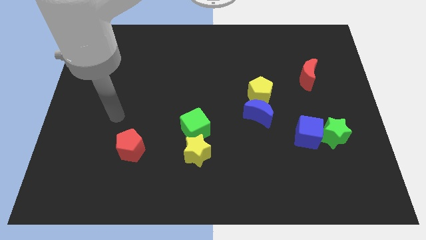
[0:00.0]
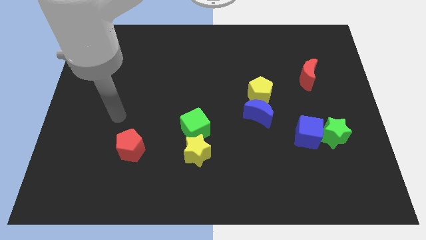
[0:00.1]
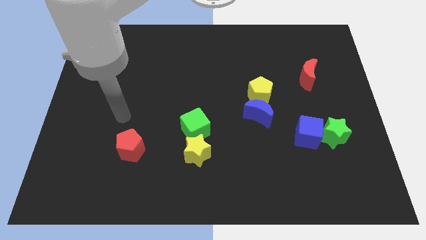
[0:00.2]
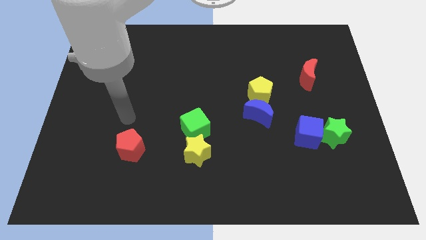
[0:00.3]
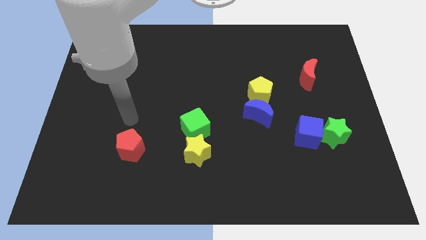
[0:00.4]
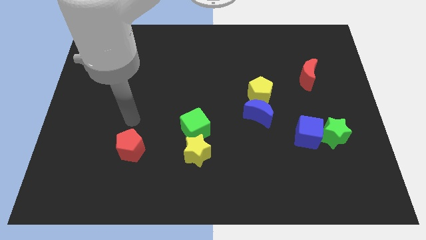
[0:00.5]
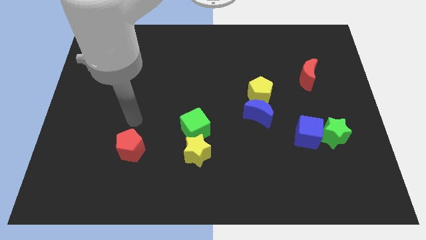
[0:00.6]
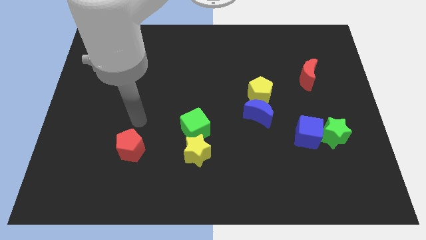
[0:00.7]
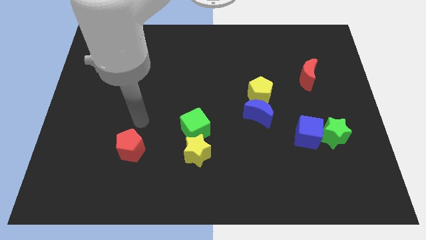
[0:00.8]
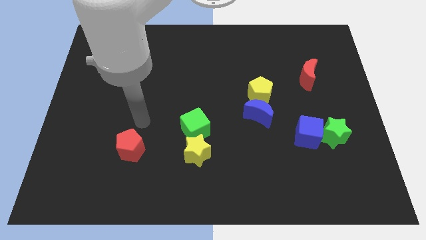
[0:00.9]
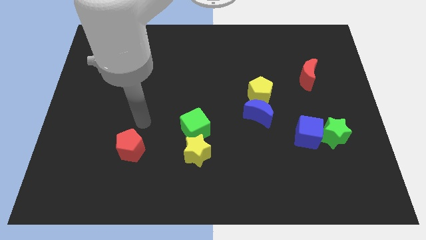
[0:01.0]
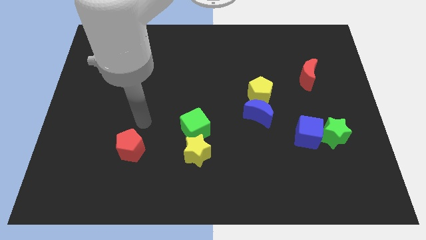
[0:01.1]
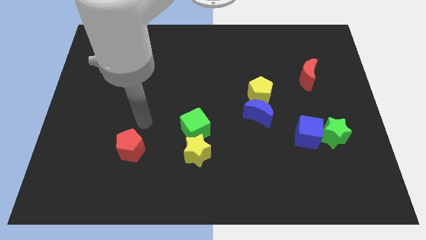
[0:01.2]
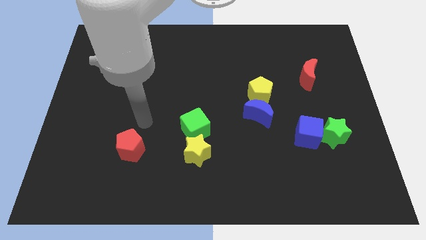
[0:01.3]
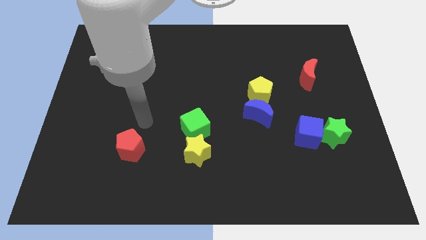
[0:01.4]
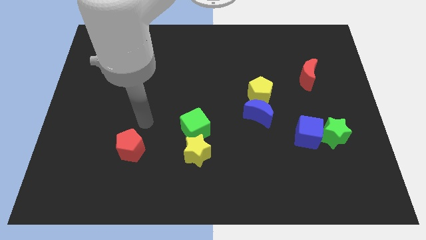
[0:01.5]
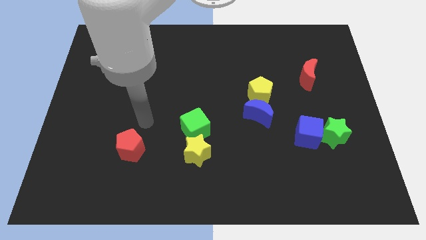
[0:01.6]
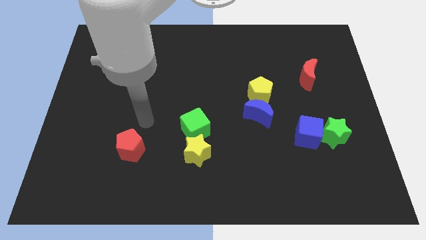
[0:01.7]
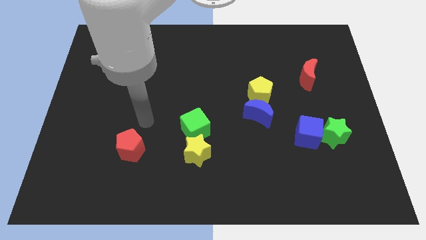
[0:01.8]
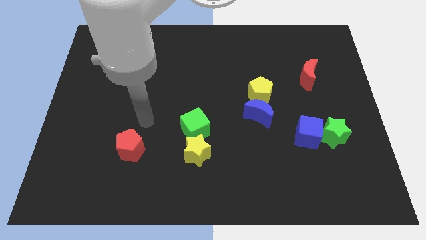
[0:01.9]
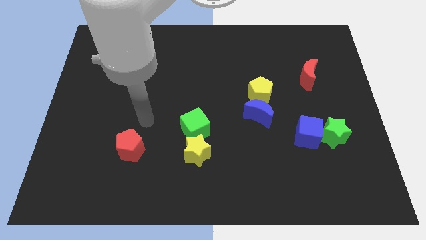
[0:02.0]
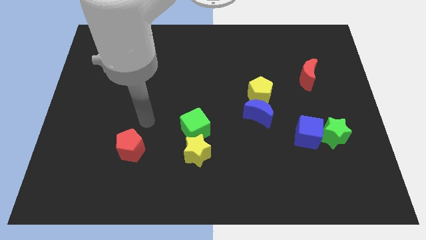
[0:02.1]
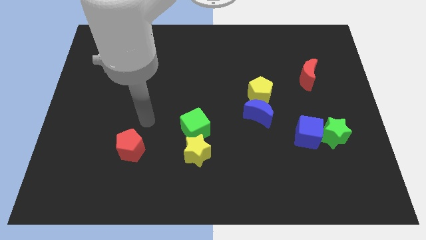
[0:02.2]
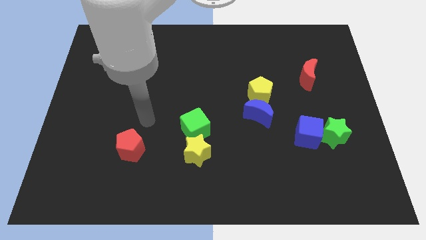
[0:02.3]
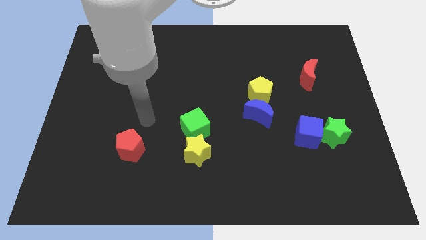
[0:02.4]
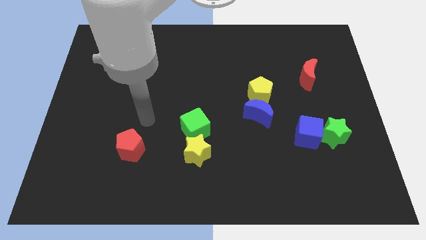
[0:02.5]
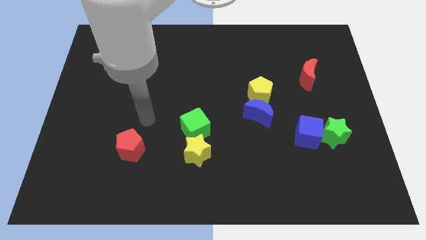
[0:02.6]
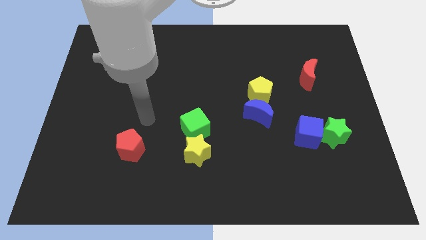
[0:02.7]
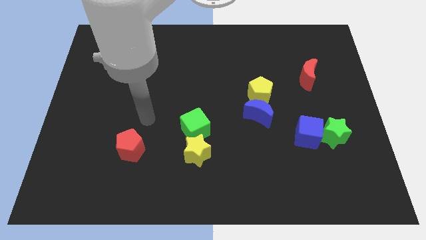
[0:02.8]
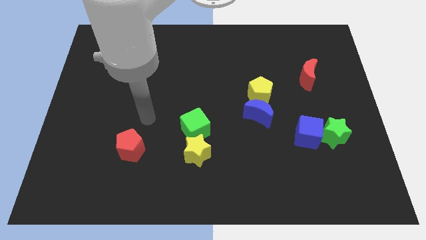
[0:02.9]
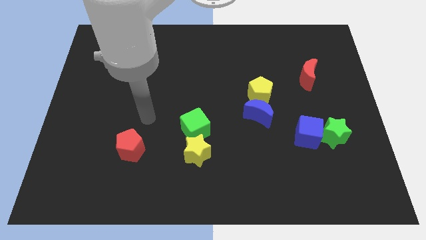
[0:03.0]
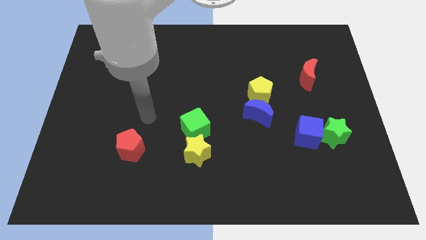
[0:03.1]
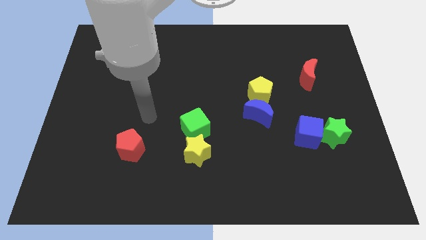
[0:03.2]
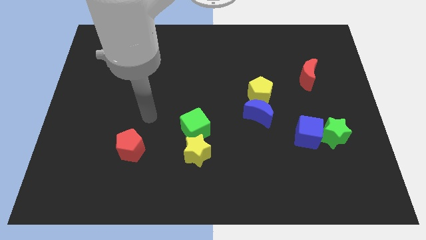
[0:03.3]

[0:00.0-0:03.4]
move your hand to right side

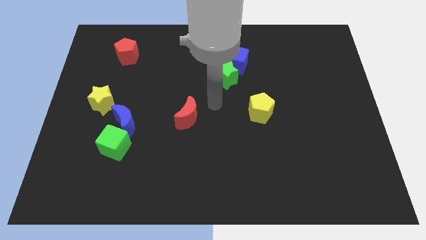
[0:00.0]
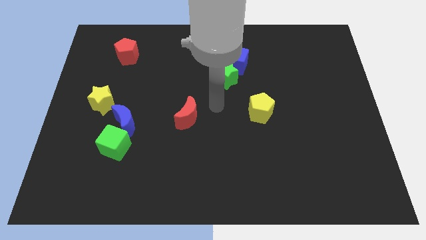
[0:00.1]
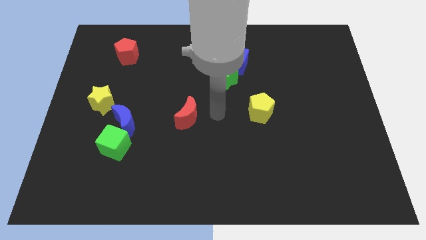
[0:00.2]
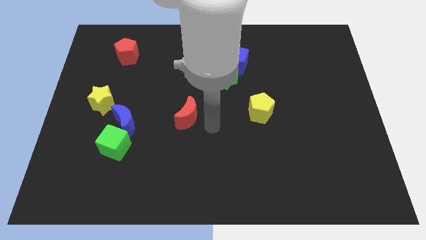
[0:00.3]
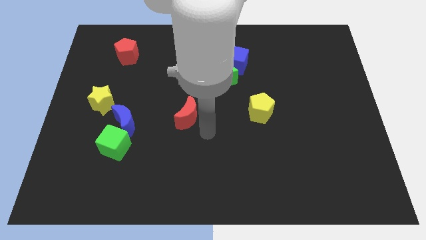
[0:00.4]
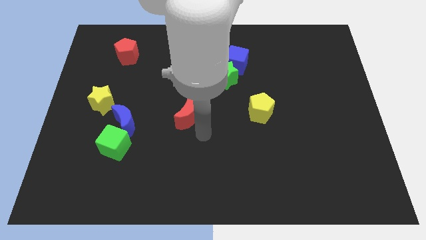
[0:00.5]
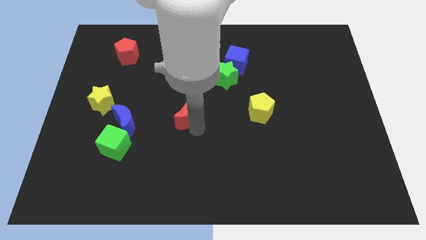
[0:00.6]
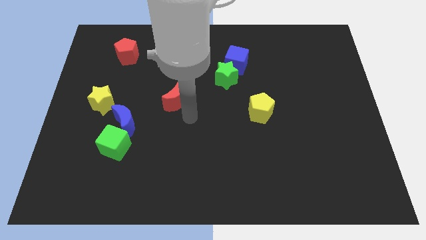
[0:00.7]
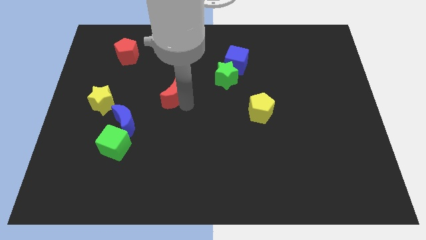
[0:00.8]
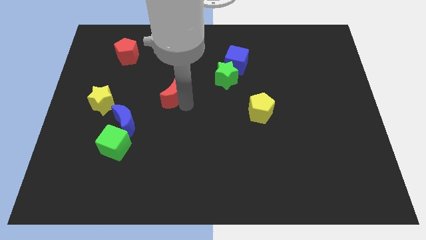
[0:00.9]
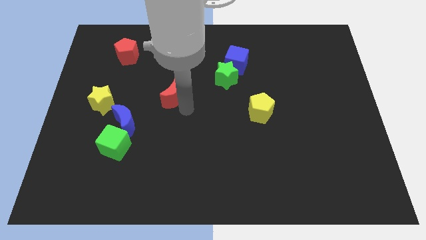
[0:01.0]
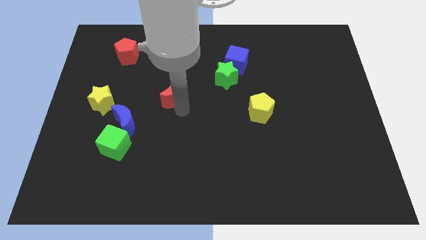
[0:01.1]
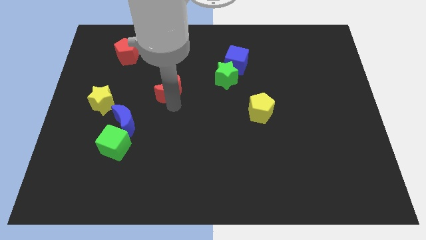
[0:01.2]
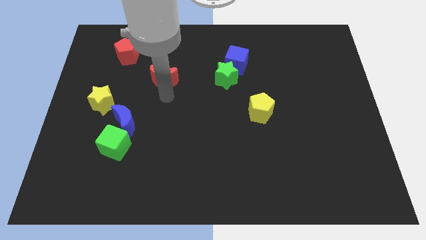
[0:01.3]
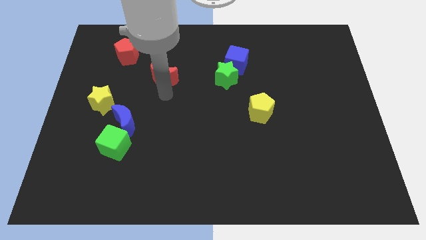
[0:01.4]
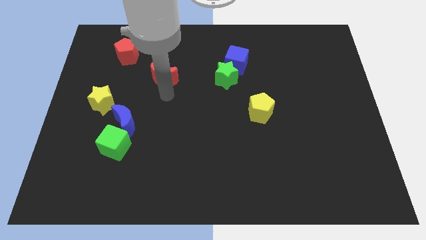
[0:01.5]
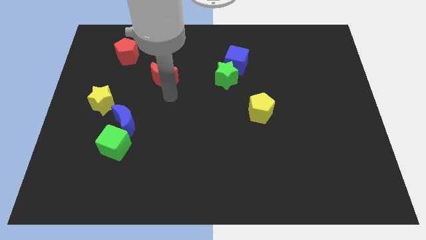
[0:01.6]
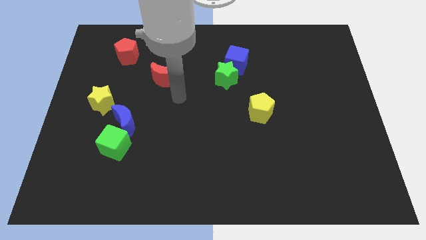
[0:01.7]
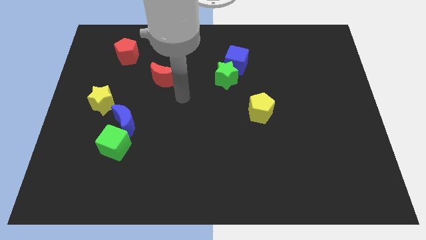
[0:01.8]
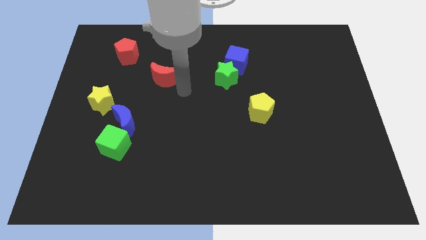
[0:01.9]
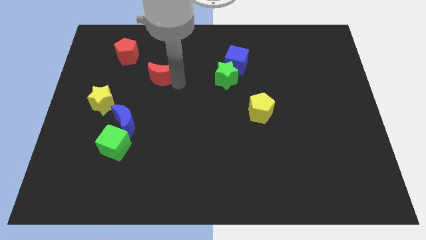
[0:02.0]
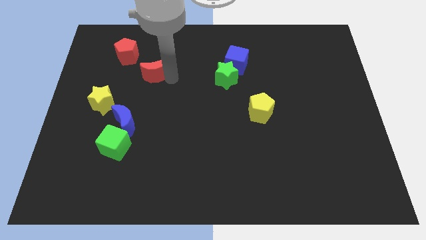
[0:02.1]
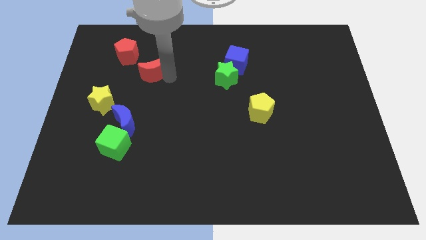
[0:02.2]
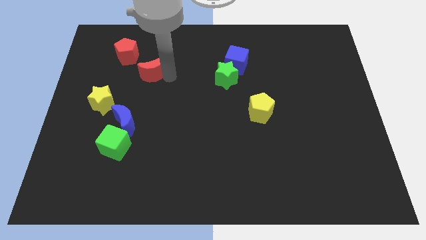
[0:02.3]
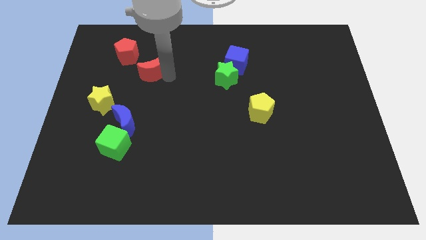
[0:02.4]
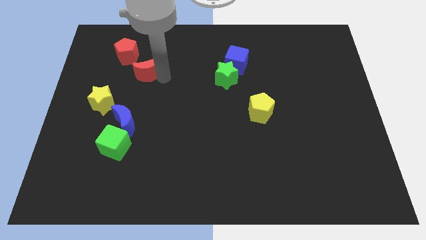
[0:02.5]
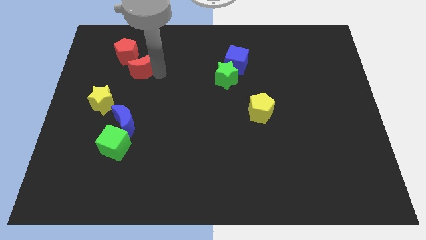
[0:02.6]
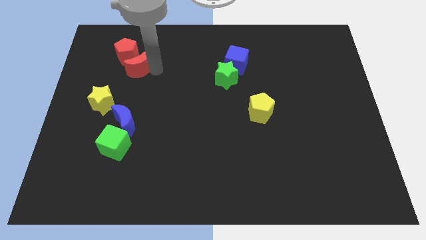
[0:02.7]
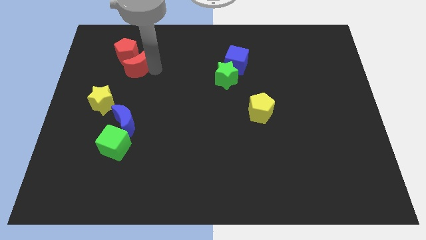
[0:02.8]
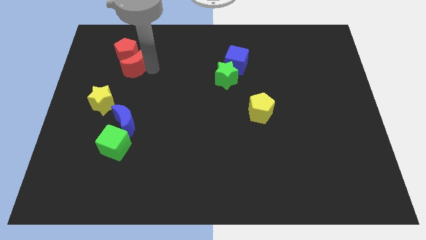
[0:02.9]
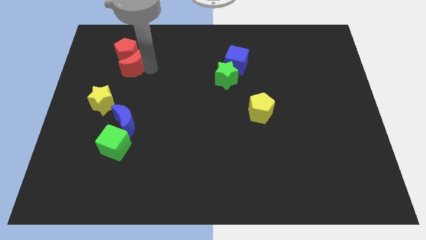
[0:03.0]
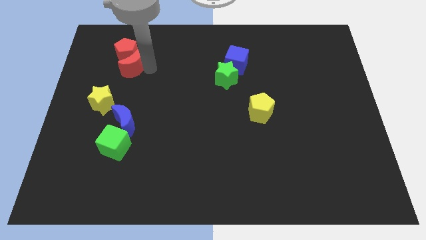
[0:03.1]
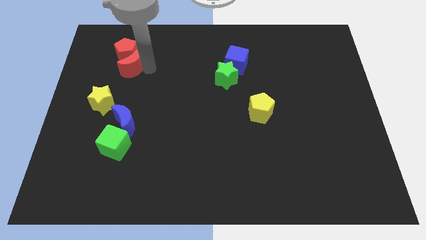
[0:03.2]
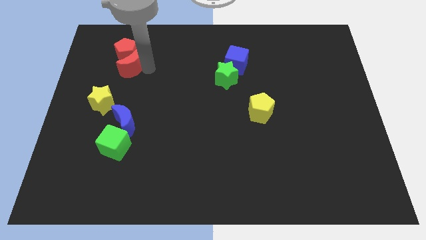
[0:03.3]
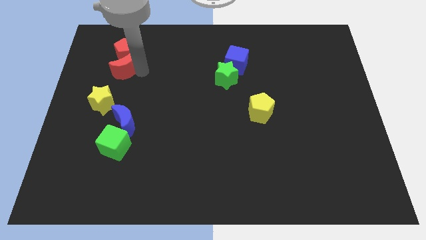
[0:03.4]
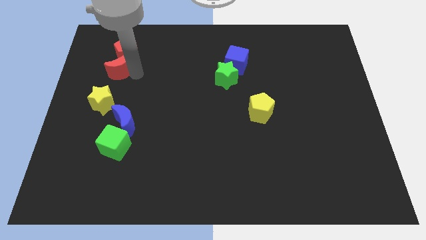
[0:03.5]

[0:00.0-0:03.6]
make 2 red blocks together

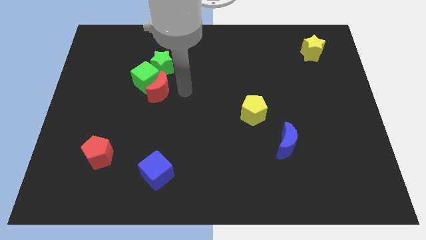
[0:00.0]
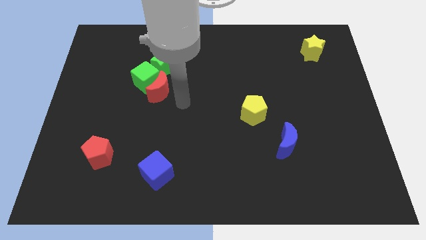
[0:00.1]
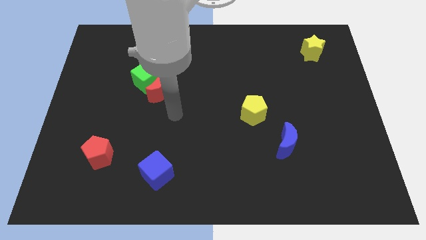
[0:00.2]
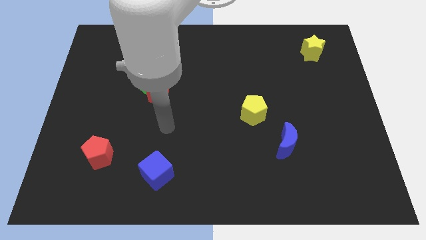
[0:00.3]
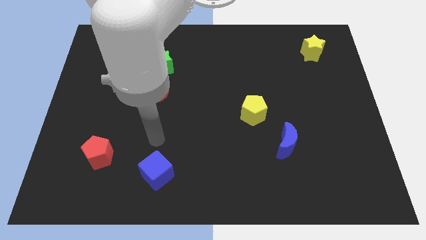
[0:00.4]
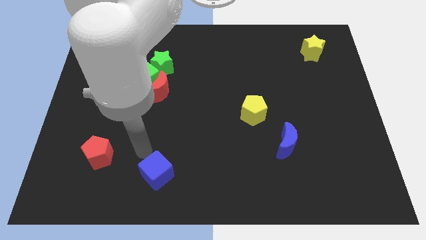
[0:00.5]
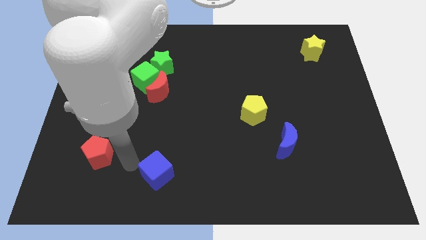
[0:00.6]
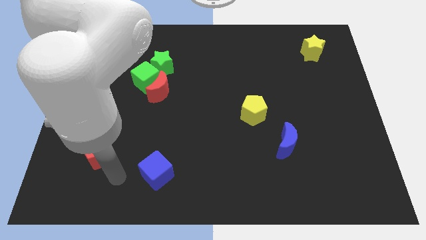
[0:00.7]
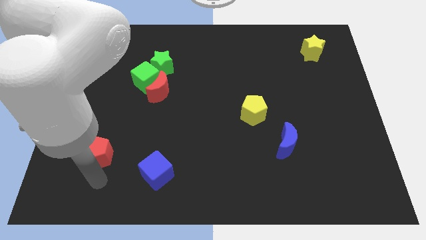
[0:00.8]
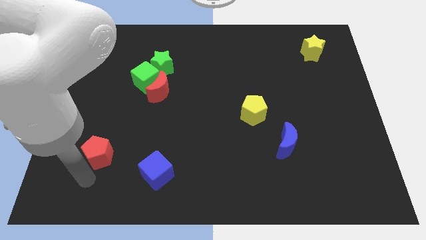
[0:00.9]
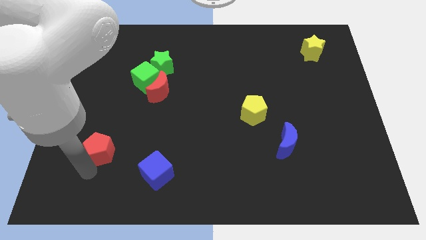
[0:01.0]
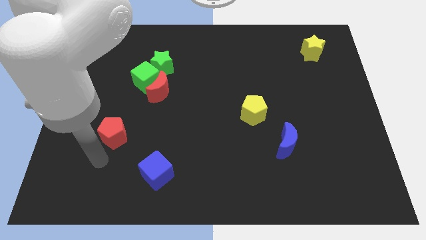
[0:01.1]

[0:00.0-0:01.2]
place your arm close to red pentagon

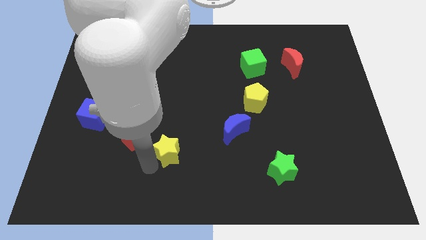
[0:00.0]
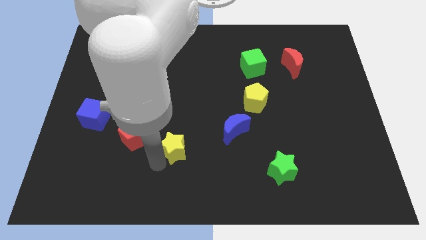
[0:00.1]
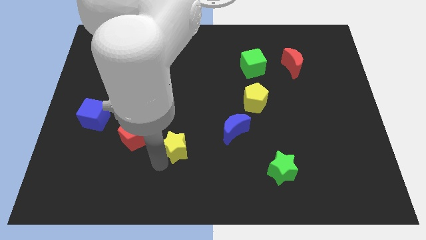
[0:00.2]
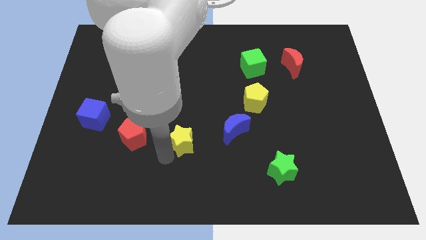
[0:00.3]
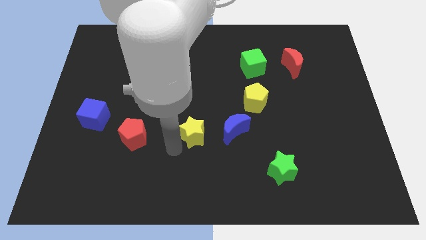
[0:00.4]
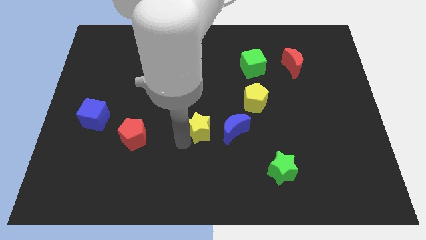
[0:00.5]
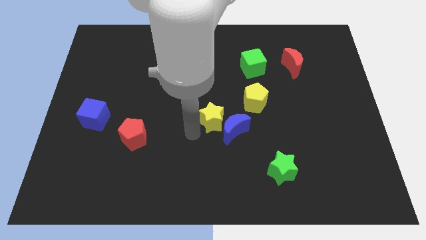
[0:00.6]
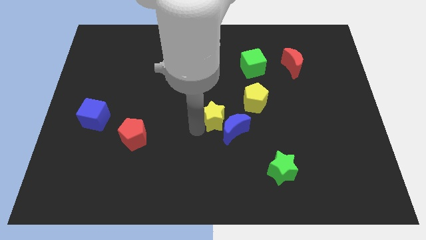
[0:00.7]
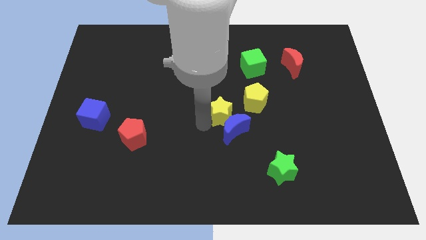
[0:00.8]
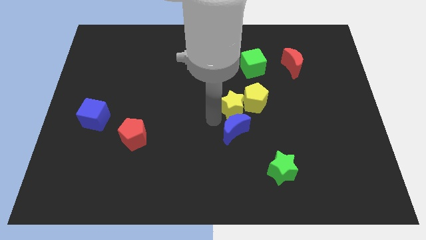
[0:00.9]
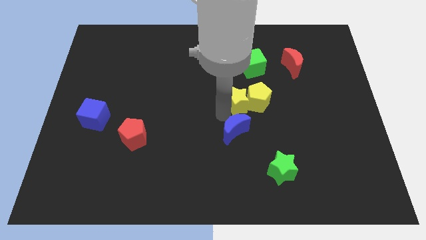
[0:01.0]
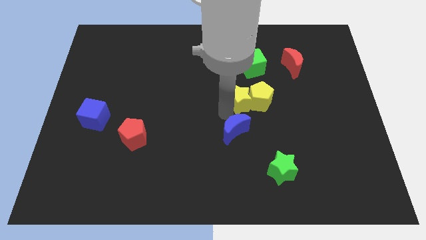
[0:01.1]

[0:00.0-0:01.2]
push the yellow star into the yellow pentagon
